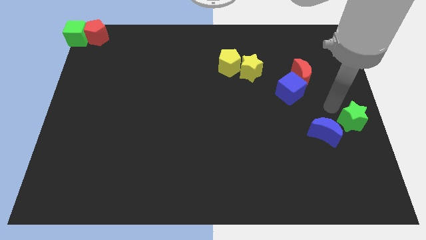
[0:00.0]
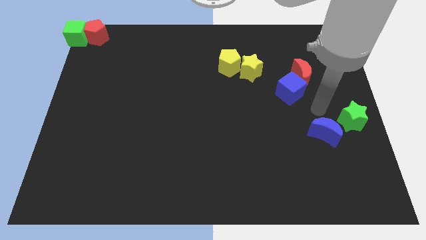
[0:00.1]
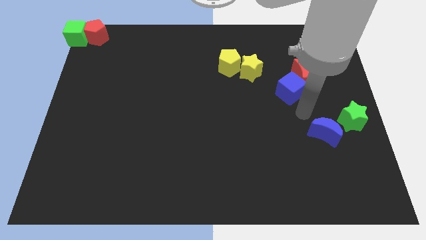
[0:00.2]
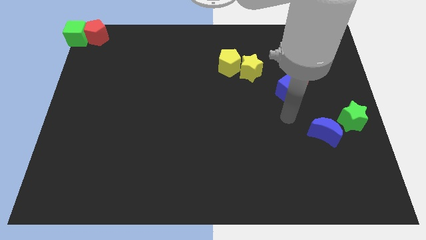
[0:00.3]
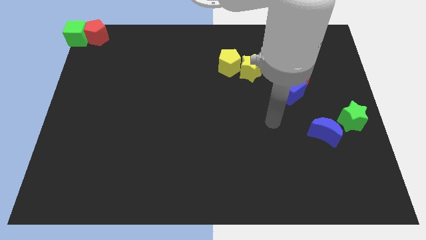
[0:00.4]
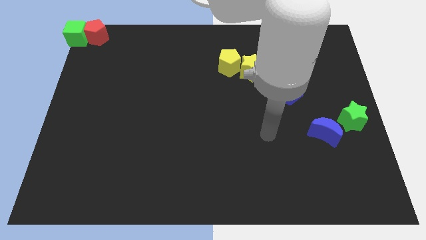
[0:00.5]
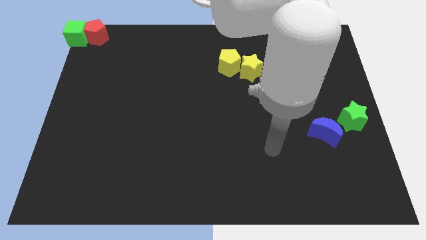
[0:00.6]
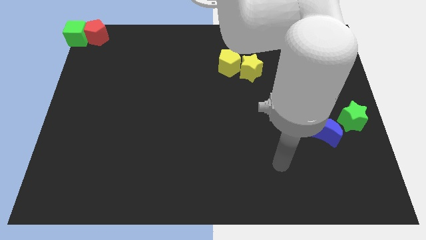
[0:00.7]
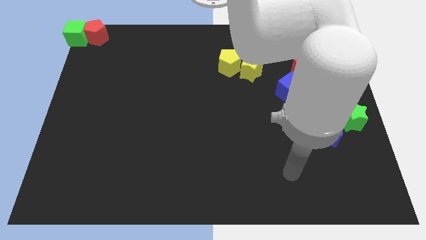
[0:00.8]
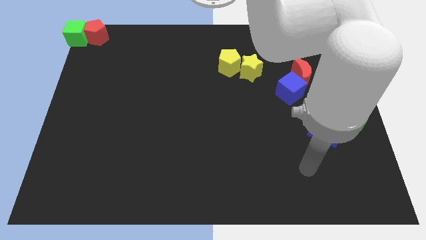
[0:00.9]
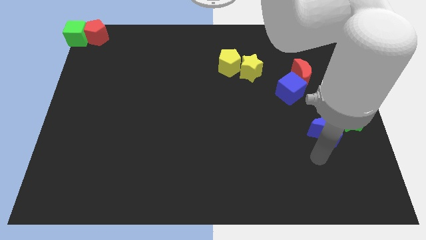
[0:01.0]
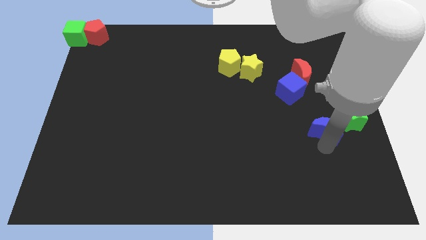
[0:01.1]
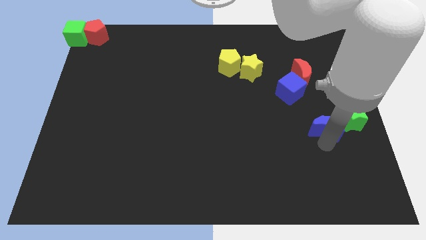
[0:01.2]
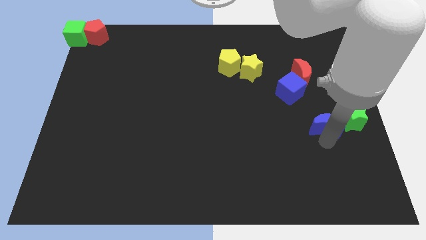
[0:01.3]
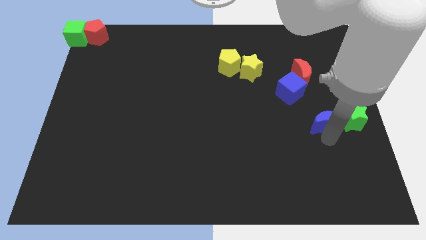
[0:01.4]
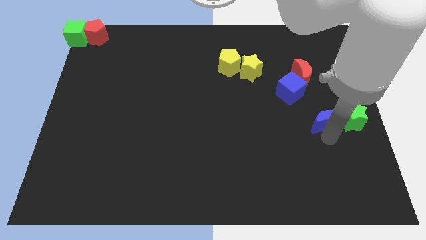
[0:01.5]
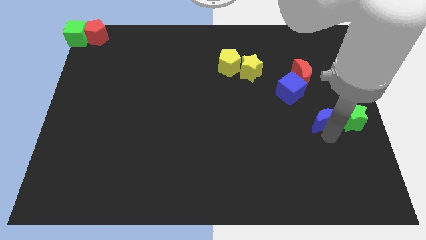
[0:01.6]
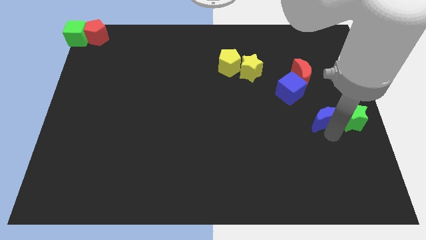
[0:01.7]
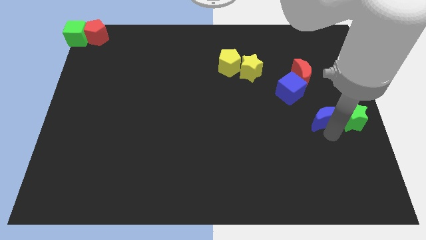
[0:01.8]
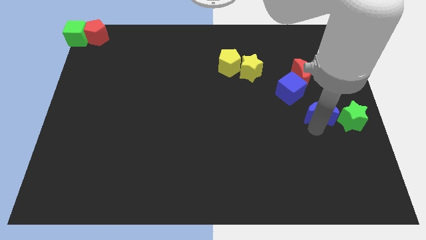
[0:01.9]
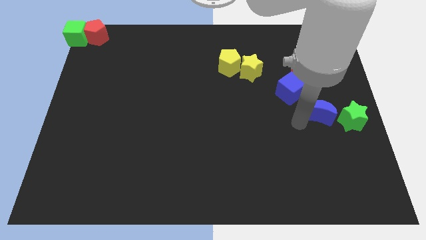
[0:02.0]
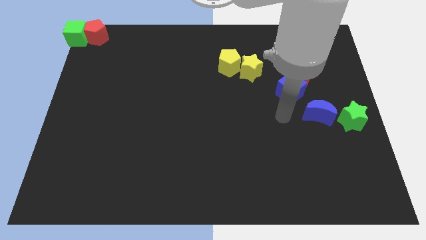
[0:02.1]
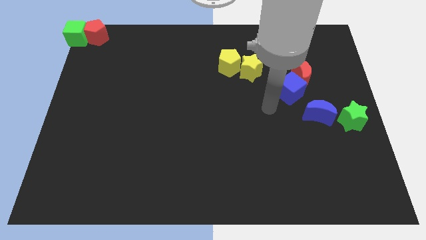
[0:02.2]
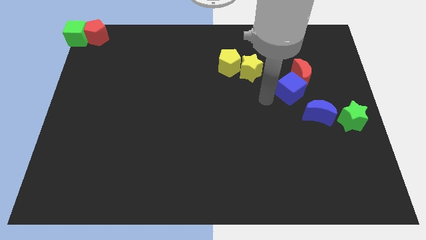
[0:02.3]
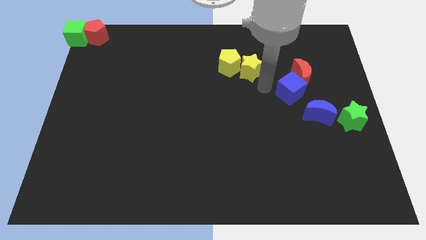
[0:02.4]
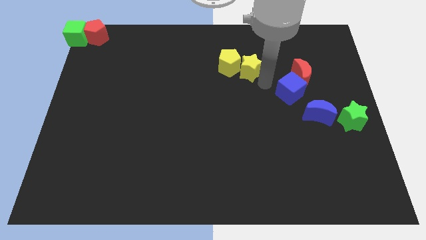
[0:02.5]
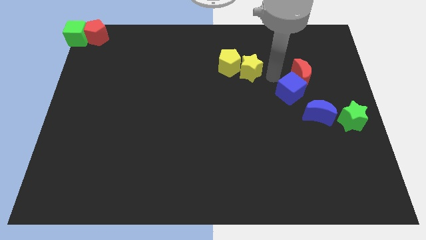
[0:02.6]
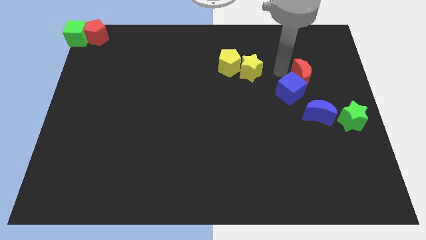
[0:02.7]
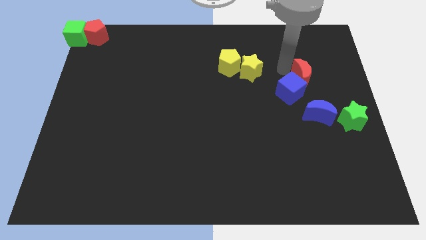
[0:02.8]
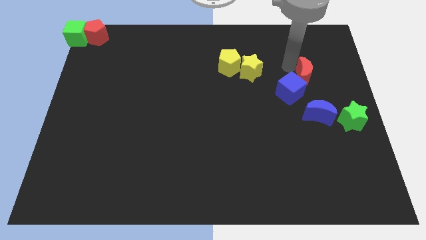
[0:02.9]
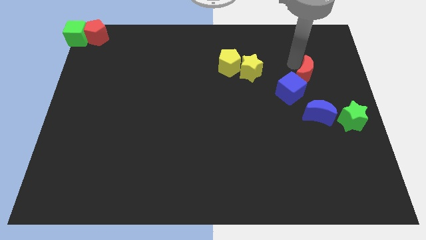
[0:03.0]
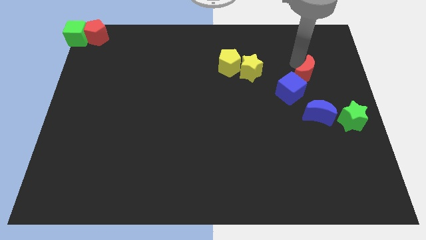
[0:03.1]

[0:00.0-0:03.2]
move the blue crescent towards the left of the green star

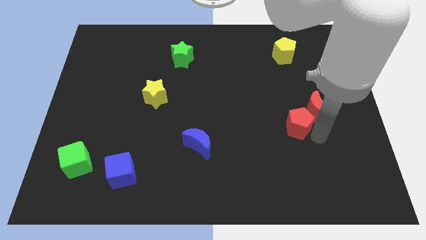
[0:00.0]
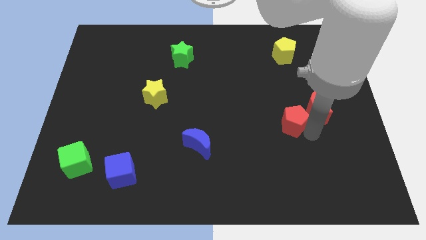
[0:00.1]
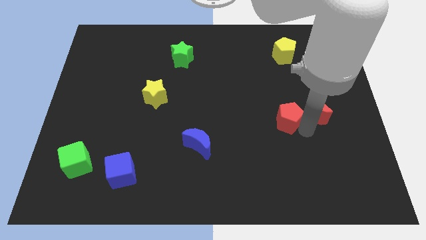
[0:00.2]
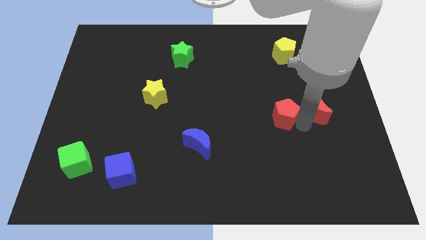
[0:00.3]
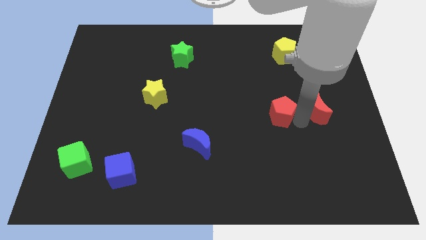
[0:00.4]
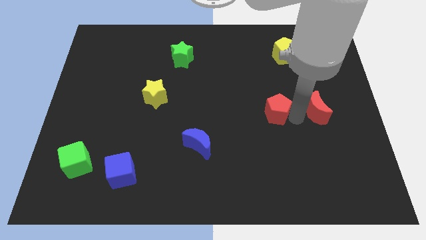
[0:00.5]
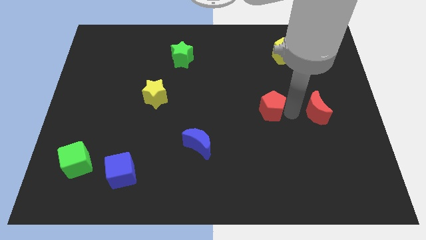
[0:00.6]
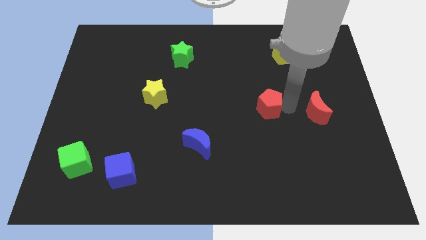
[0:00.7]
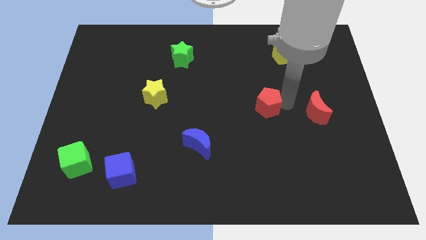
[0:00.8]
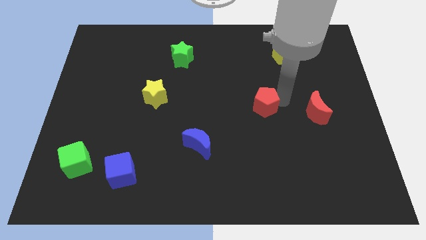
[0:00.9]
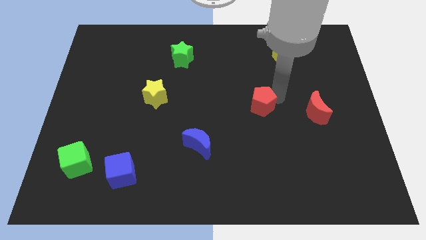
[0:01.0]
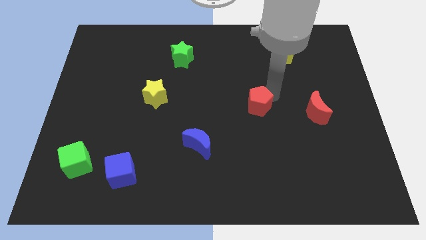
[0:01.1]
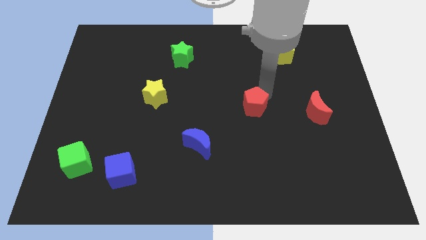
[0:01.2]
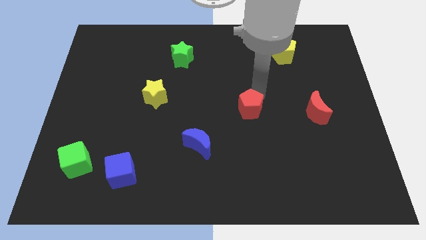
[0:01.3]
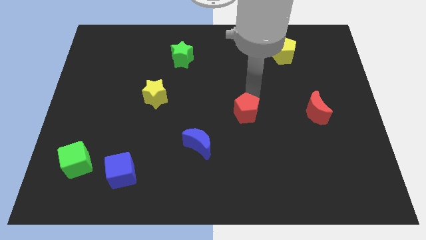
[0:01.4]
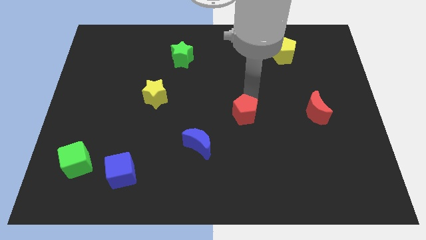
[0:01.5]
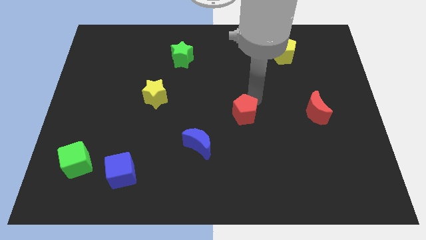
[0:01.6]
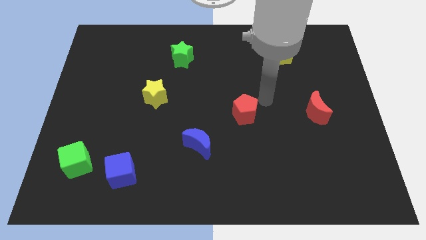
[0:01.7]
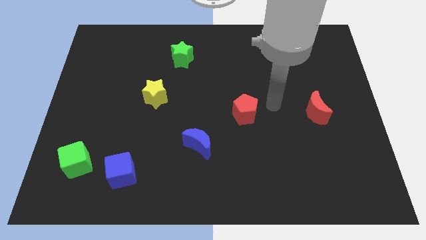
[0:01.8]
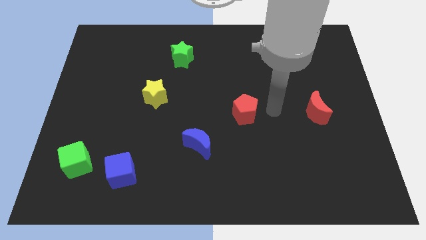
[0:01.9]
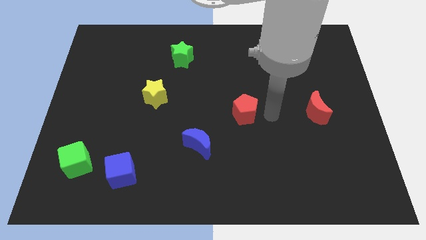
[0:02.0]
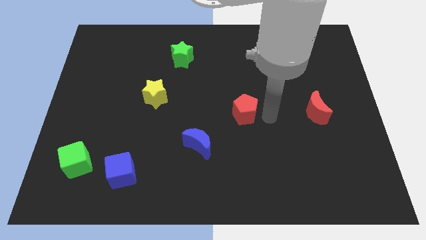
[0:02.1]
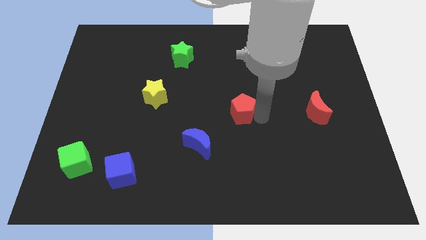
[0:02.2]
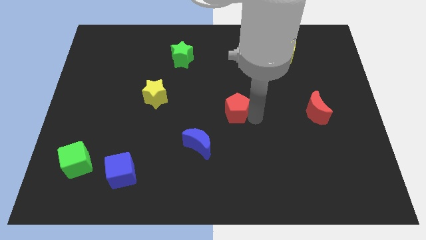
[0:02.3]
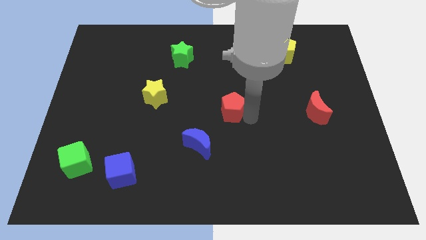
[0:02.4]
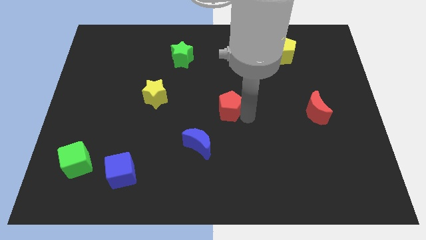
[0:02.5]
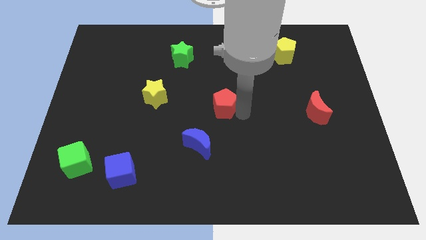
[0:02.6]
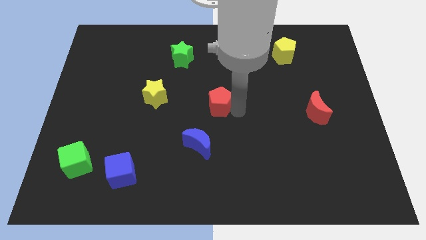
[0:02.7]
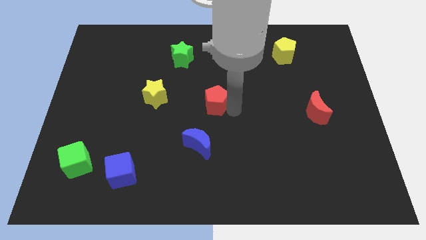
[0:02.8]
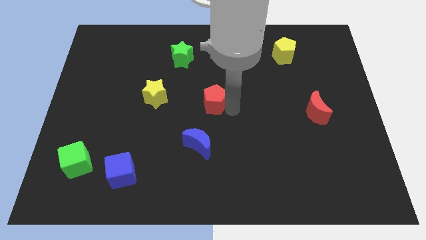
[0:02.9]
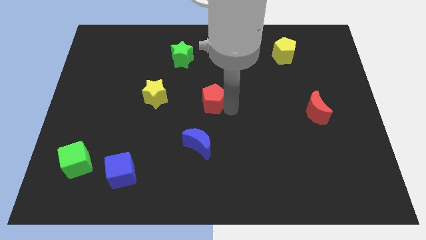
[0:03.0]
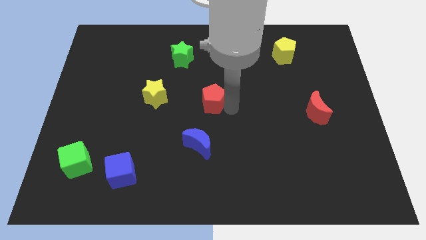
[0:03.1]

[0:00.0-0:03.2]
push the red pentagon to the center of the board

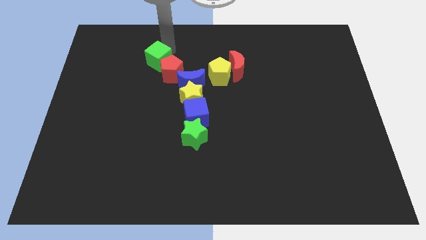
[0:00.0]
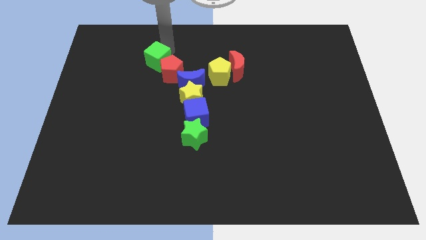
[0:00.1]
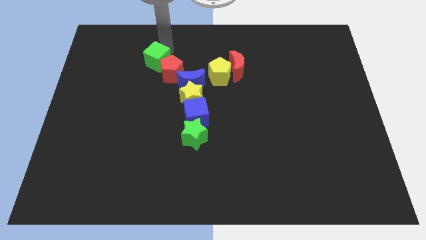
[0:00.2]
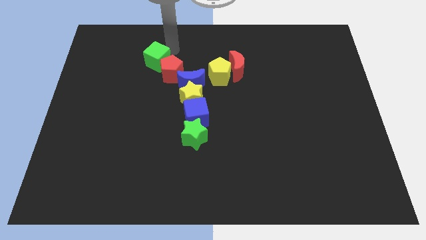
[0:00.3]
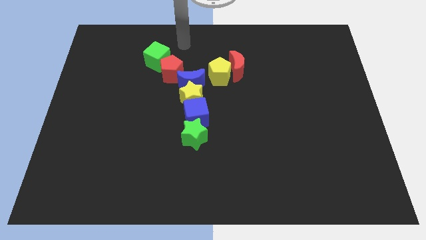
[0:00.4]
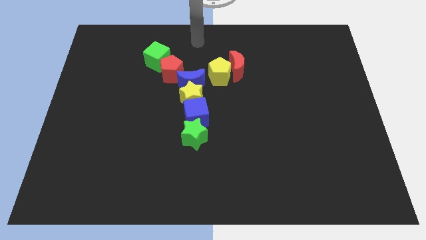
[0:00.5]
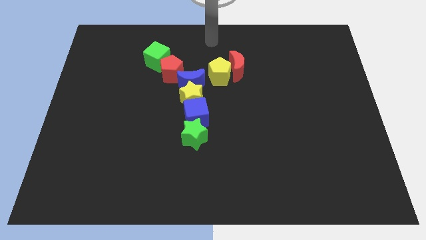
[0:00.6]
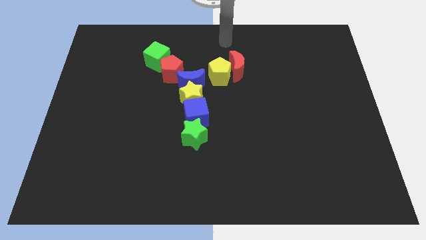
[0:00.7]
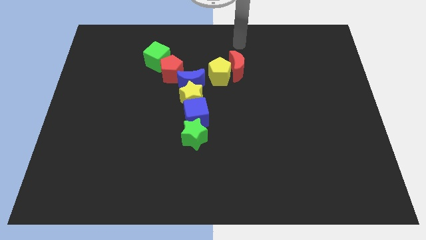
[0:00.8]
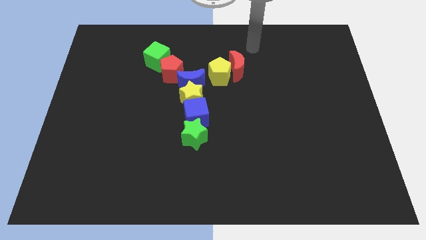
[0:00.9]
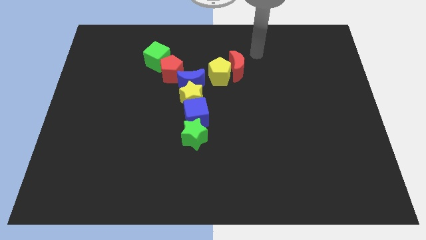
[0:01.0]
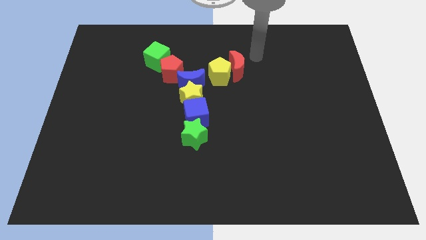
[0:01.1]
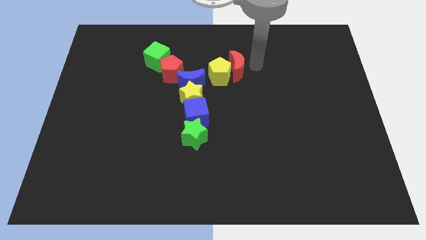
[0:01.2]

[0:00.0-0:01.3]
move your arm near the red moon

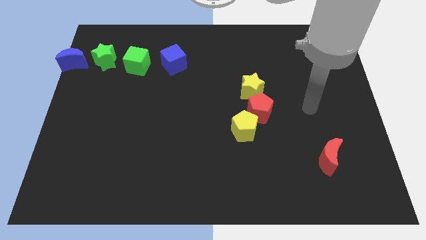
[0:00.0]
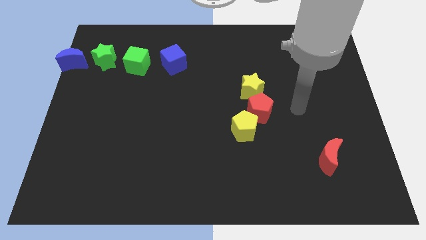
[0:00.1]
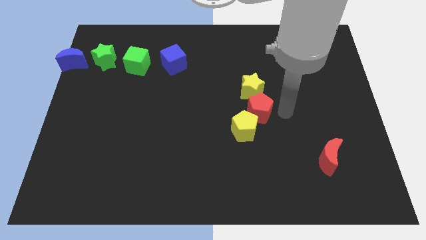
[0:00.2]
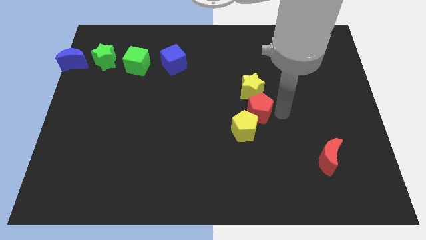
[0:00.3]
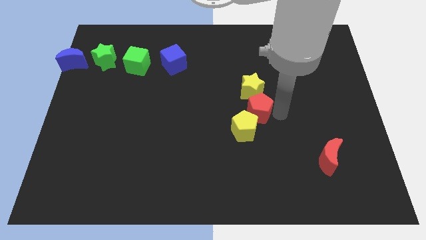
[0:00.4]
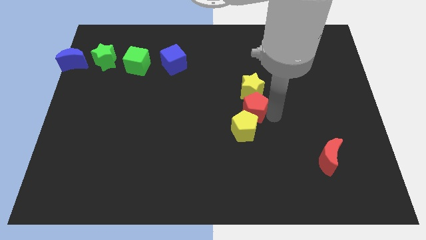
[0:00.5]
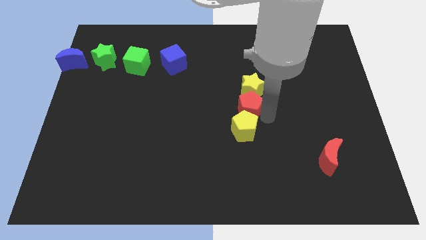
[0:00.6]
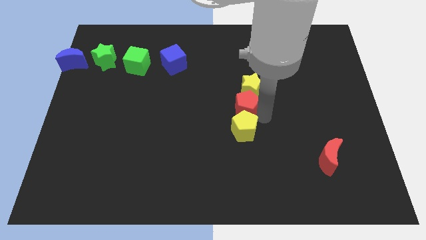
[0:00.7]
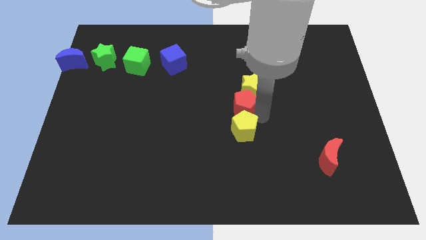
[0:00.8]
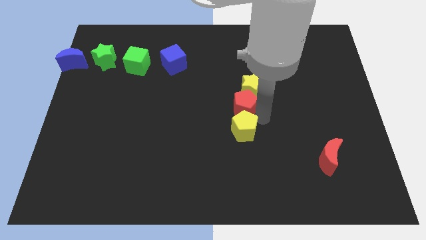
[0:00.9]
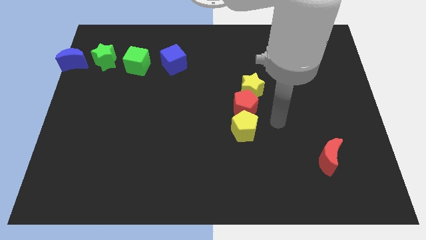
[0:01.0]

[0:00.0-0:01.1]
place the red pentagon in between the yellow blocks

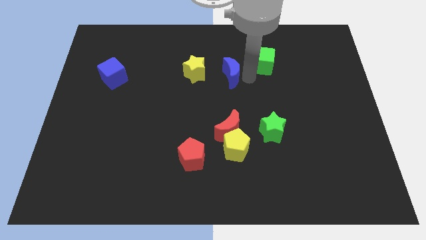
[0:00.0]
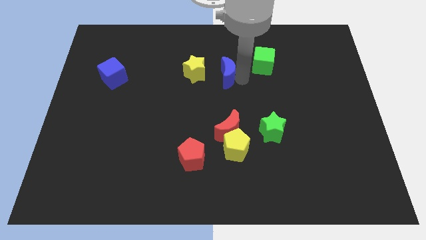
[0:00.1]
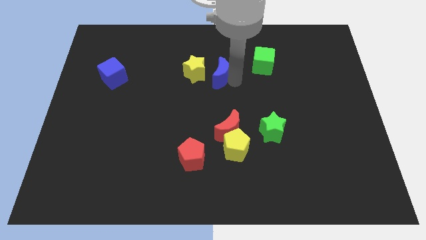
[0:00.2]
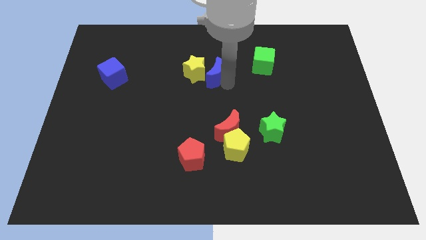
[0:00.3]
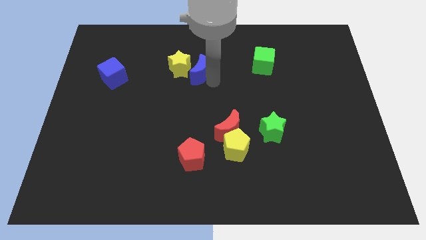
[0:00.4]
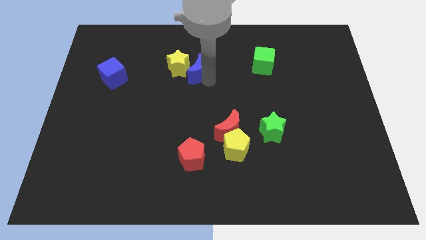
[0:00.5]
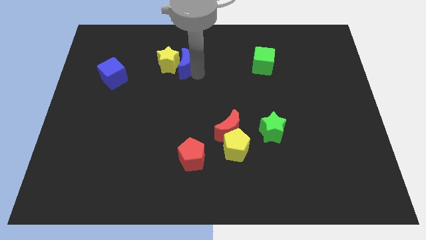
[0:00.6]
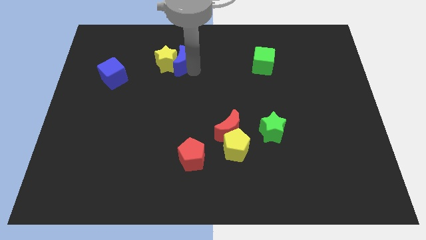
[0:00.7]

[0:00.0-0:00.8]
push the blue crescent into the yellow star
